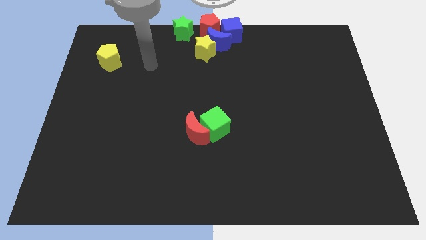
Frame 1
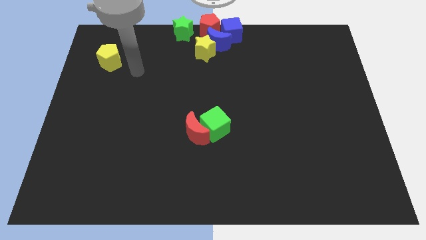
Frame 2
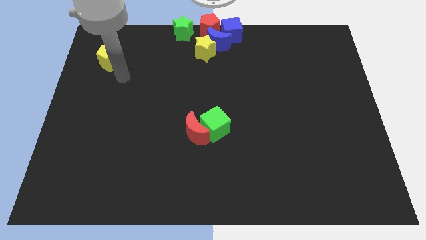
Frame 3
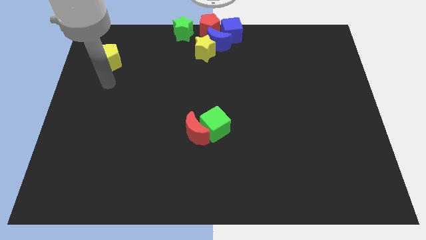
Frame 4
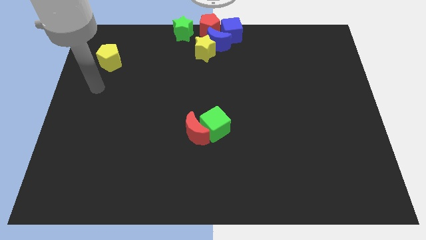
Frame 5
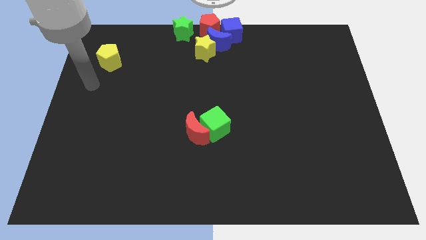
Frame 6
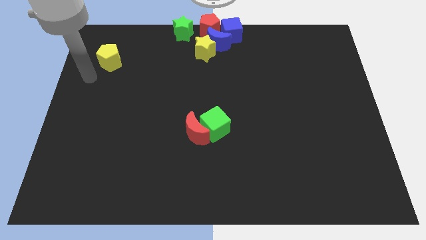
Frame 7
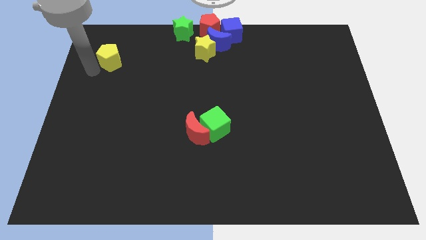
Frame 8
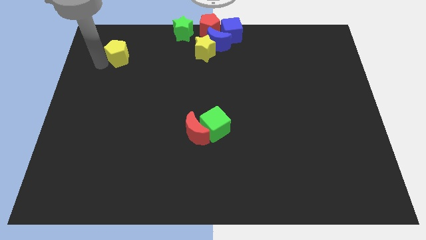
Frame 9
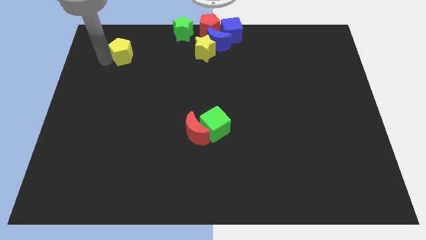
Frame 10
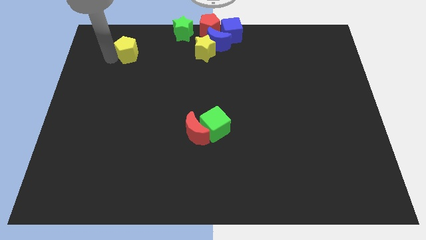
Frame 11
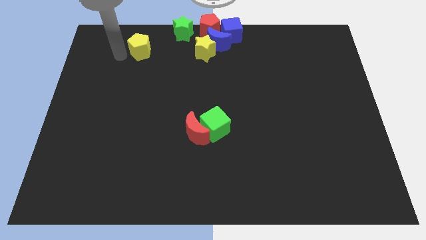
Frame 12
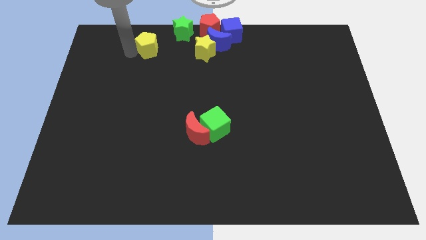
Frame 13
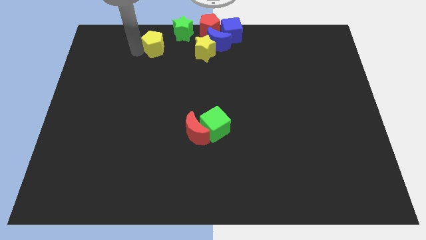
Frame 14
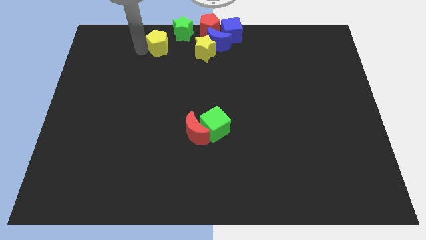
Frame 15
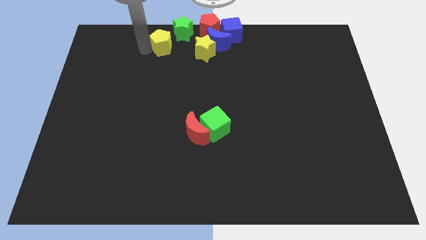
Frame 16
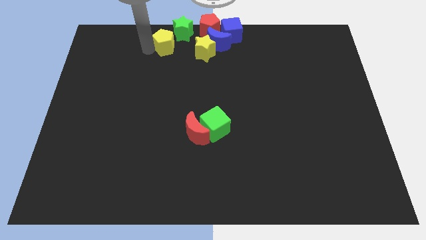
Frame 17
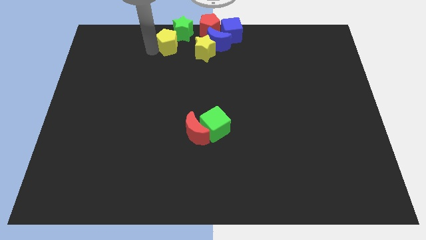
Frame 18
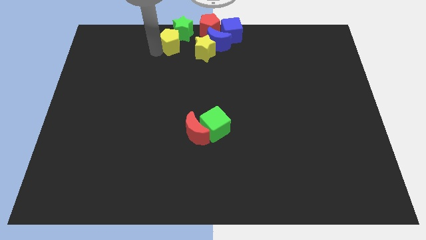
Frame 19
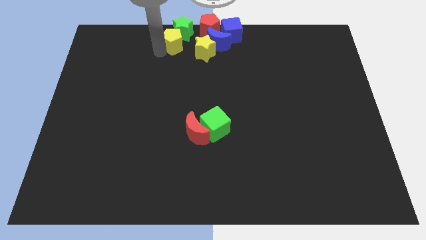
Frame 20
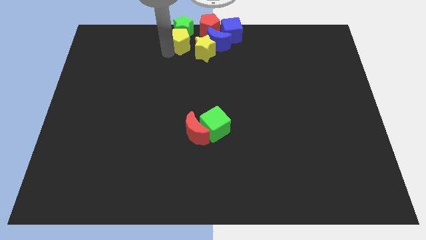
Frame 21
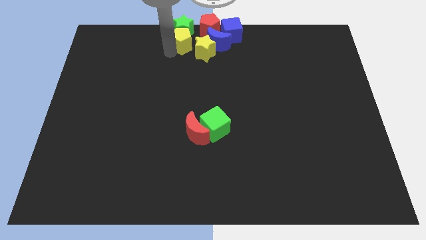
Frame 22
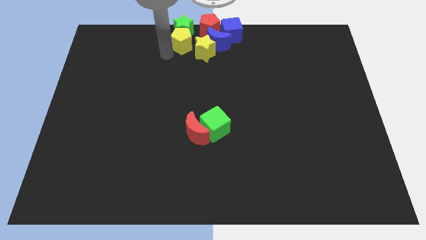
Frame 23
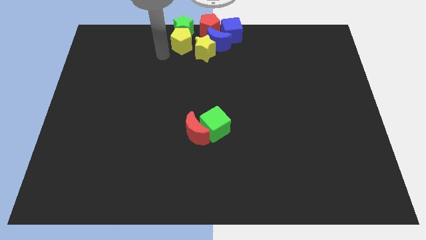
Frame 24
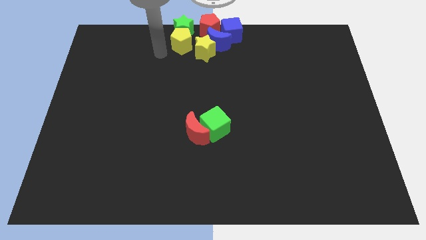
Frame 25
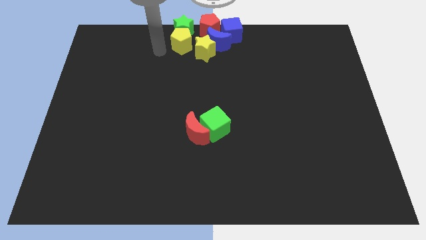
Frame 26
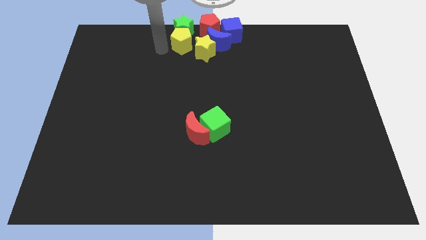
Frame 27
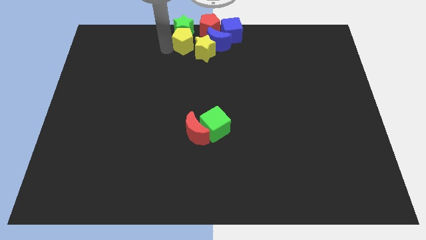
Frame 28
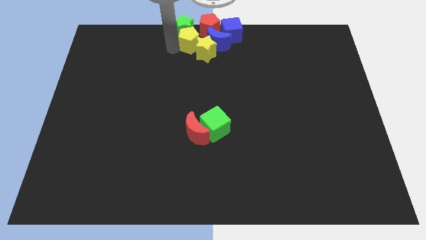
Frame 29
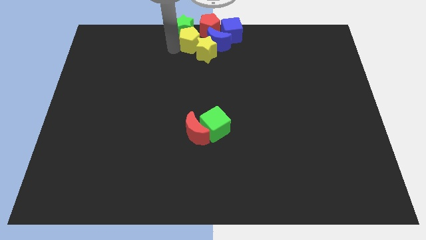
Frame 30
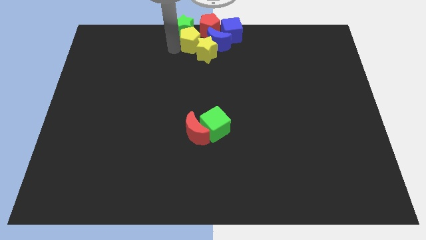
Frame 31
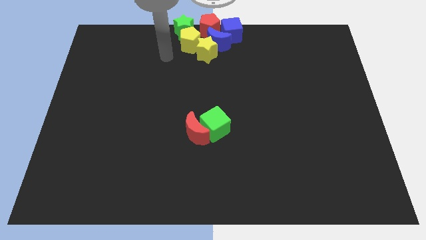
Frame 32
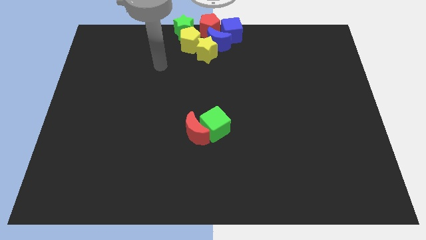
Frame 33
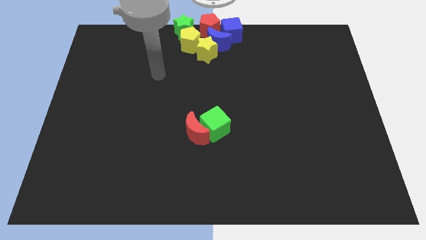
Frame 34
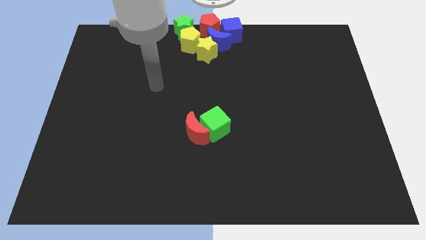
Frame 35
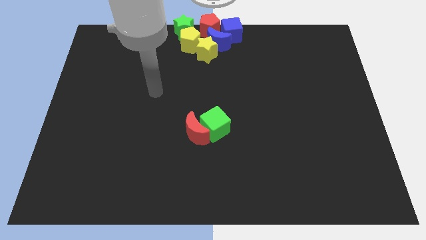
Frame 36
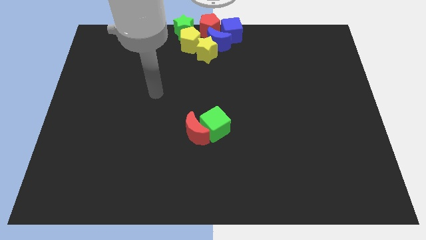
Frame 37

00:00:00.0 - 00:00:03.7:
push the yellow pentagon into the group of blocks

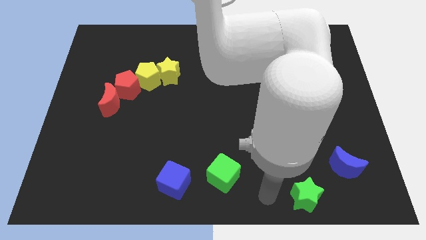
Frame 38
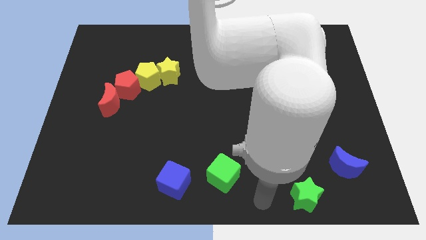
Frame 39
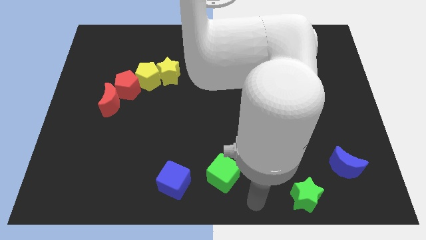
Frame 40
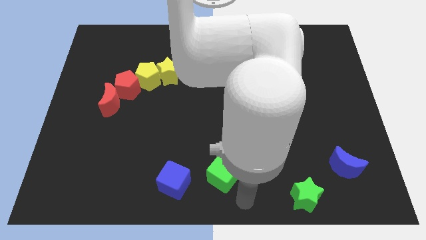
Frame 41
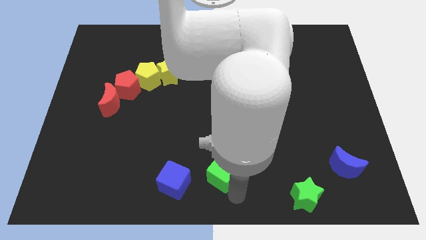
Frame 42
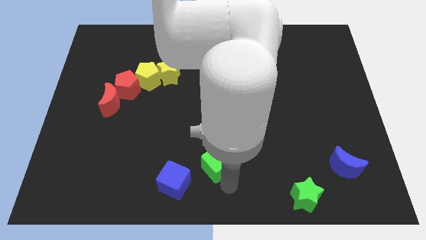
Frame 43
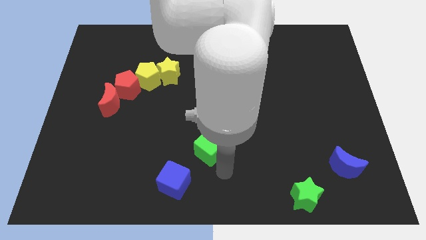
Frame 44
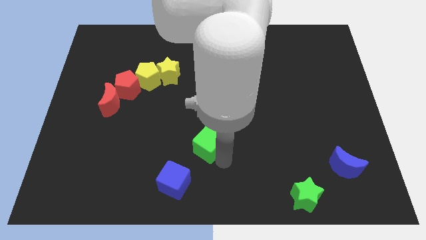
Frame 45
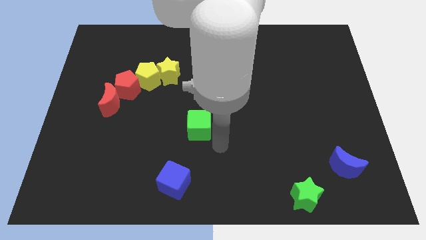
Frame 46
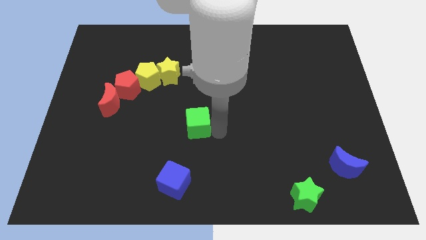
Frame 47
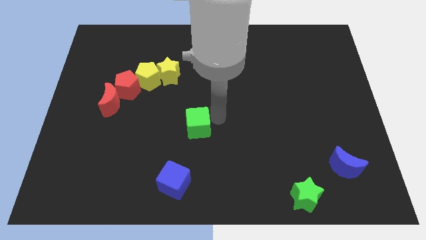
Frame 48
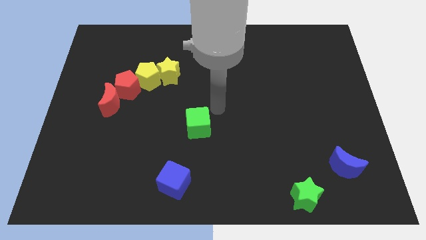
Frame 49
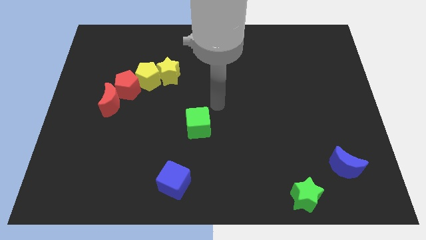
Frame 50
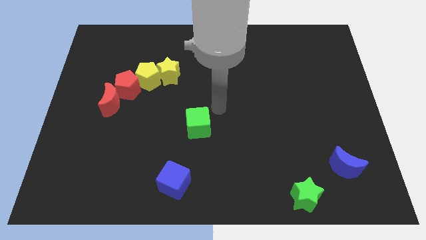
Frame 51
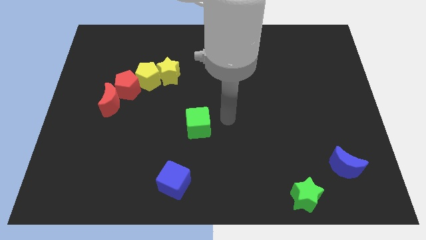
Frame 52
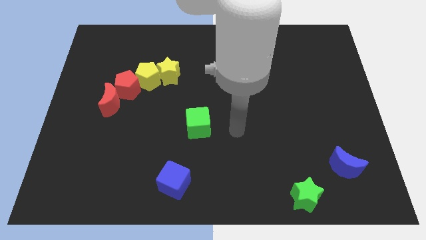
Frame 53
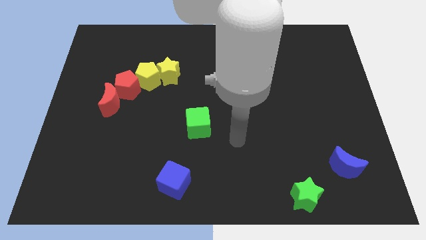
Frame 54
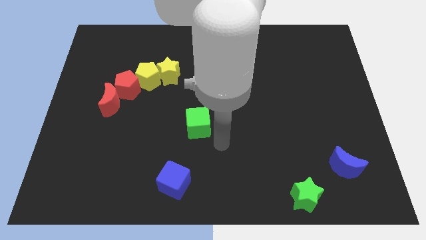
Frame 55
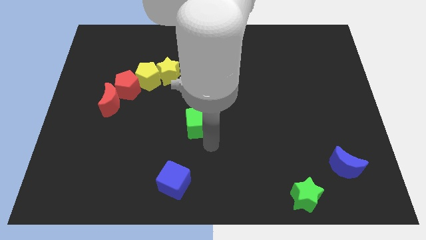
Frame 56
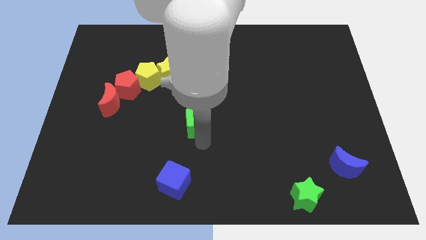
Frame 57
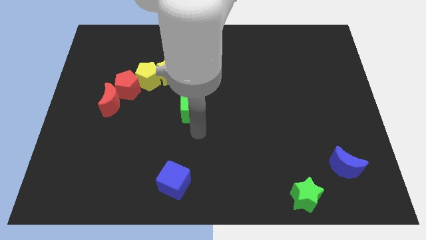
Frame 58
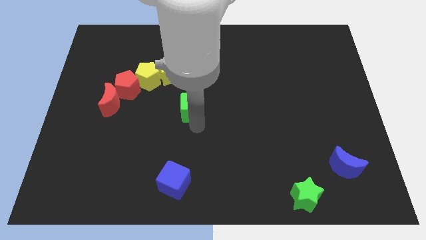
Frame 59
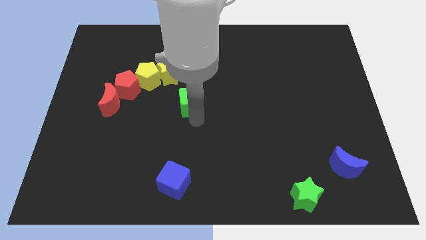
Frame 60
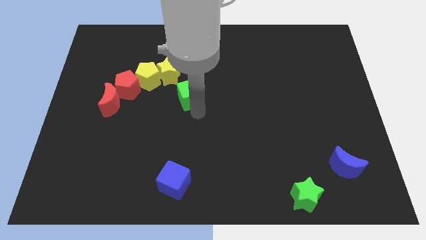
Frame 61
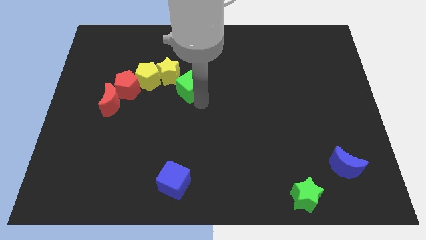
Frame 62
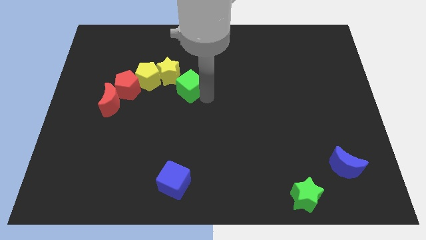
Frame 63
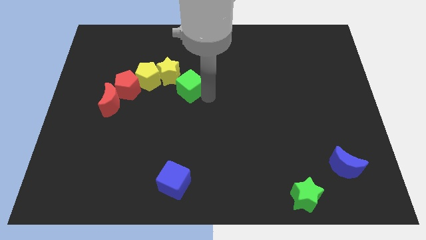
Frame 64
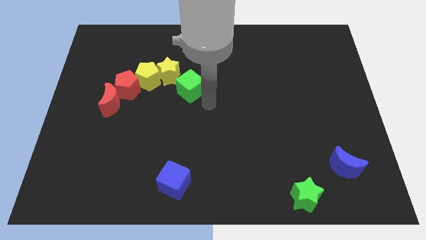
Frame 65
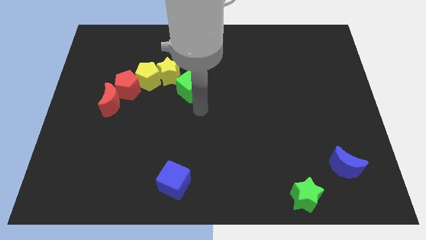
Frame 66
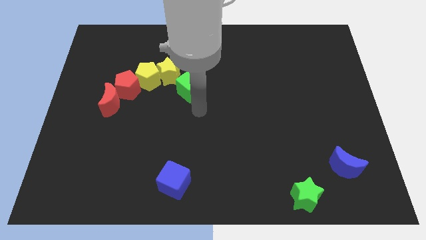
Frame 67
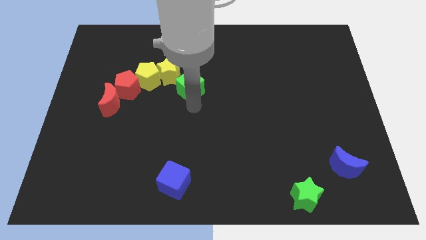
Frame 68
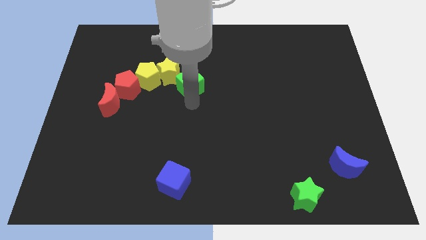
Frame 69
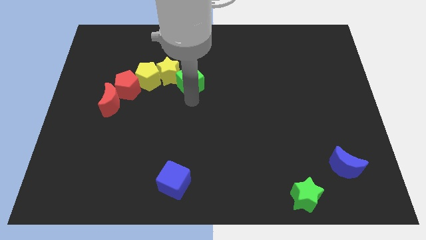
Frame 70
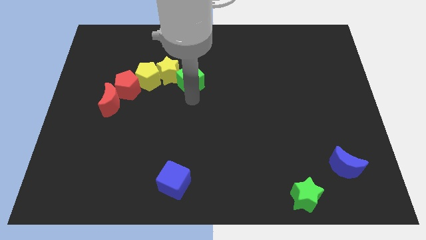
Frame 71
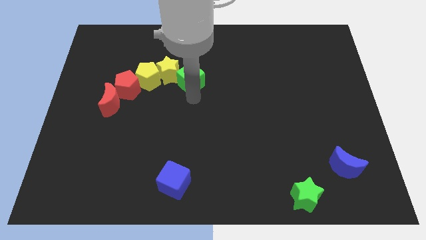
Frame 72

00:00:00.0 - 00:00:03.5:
take the green cube into the bottom right of the yellow star

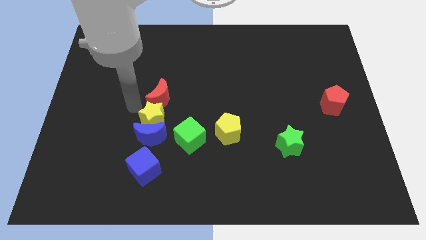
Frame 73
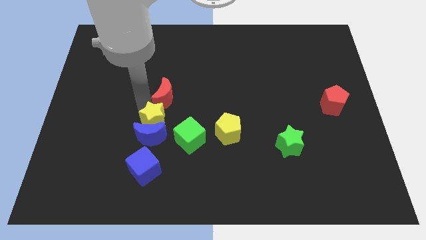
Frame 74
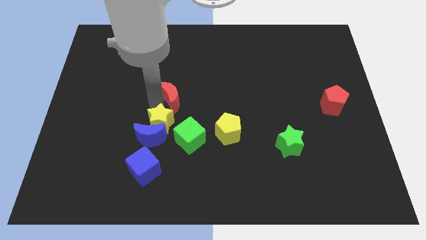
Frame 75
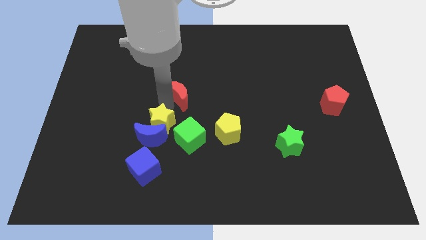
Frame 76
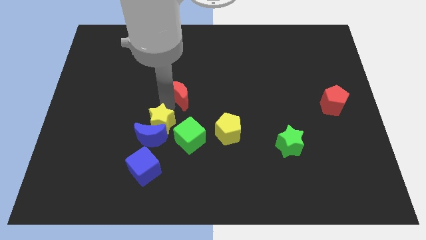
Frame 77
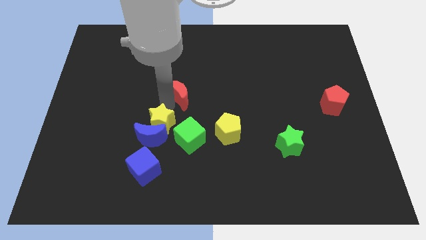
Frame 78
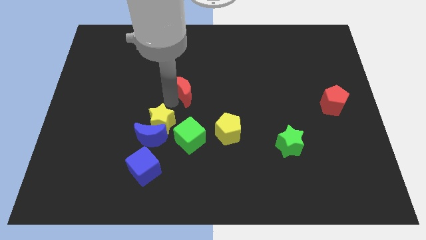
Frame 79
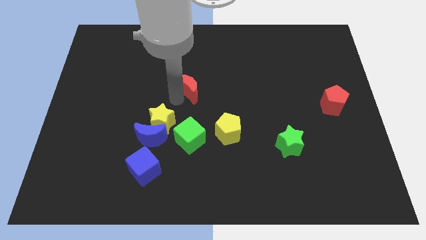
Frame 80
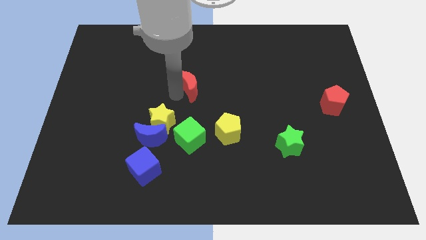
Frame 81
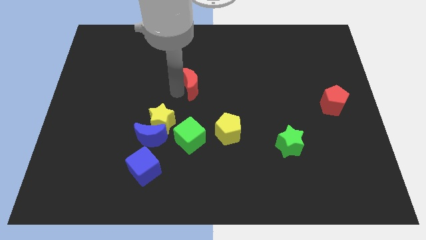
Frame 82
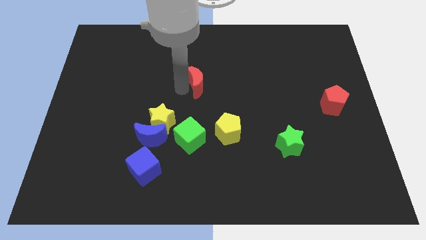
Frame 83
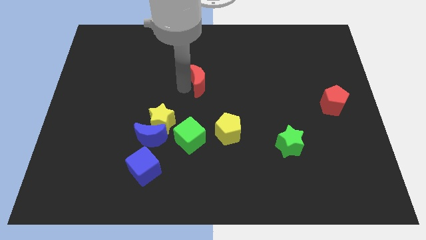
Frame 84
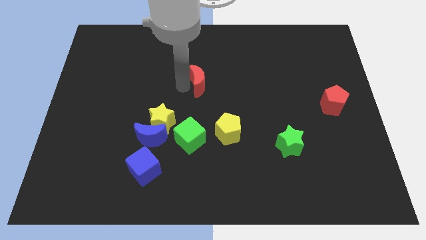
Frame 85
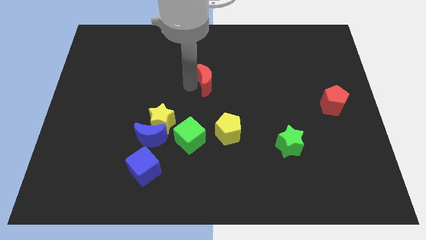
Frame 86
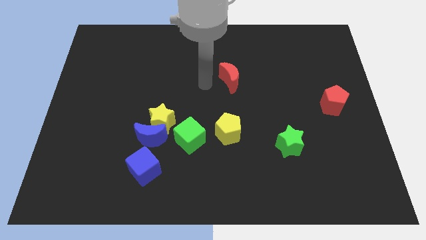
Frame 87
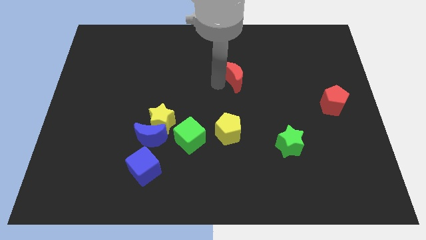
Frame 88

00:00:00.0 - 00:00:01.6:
place the red crescent vertically above the yellow pentagon

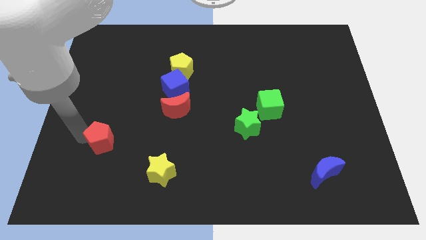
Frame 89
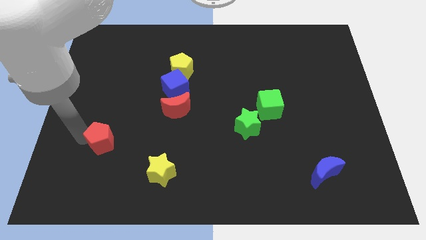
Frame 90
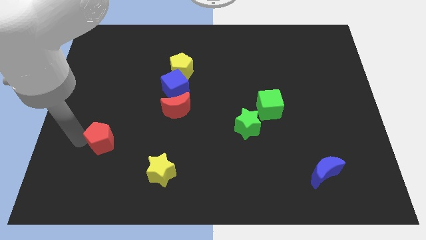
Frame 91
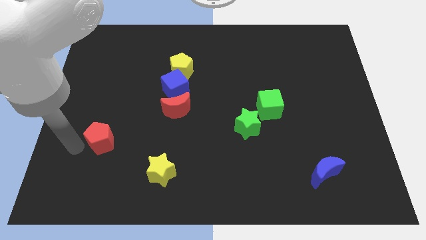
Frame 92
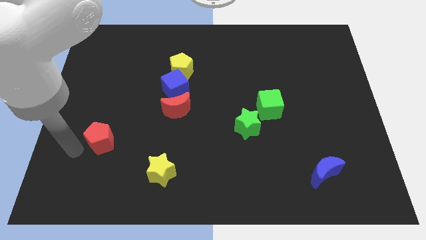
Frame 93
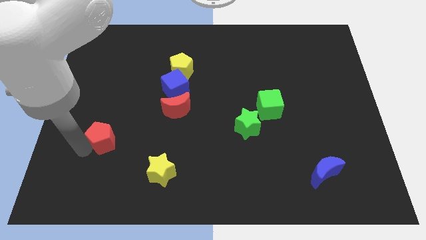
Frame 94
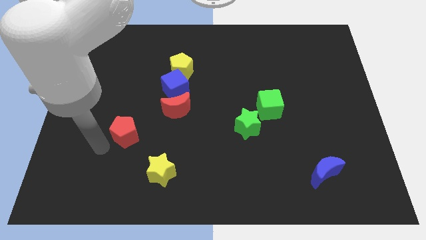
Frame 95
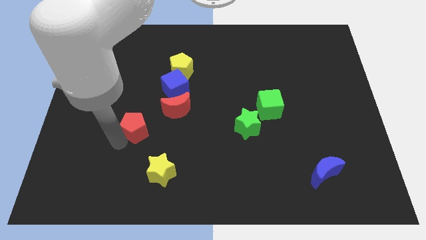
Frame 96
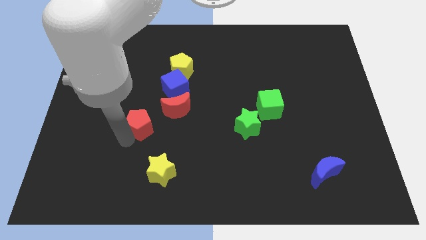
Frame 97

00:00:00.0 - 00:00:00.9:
move the red pentagon to the right of the board
